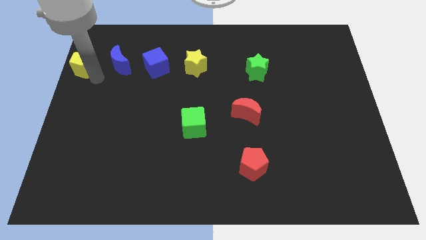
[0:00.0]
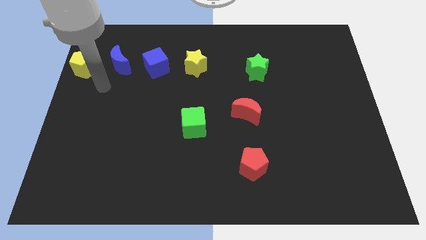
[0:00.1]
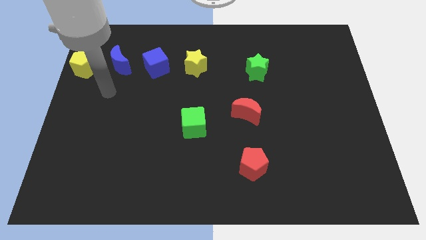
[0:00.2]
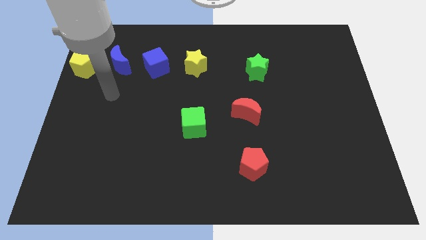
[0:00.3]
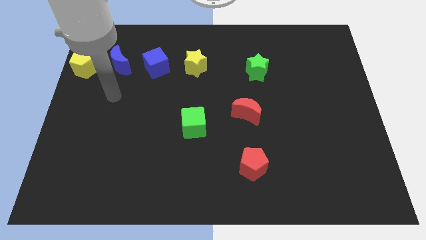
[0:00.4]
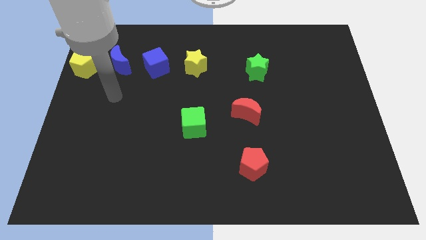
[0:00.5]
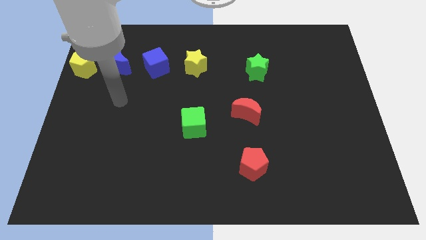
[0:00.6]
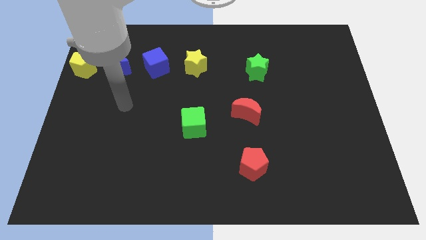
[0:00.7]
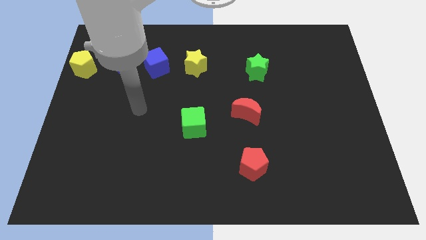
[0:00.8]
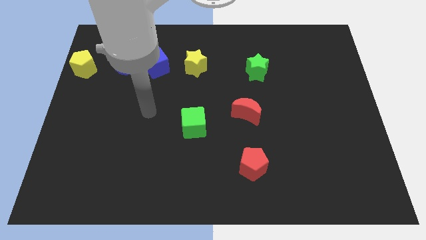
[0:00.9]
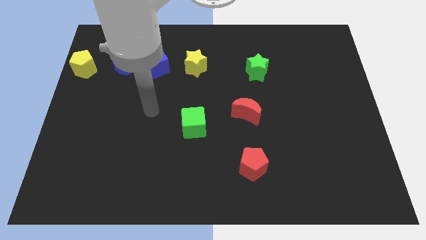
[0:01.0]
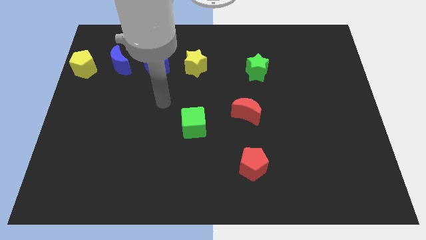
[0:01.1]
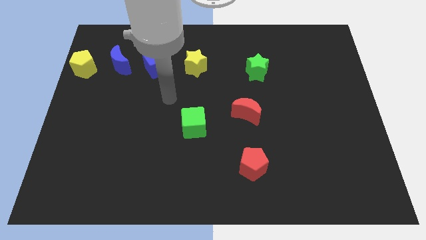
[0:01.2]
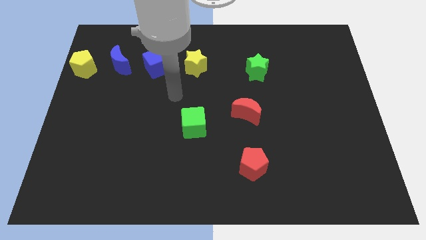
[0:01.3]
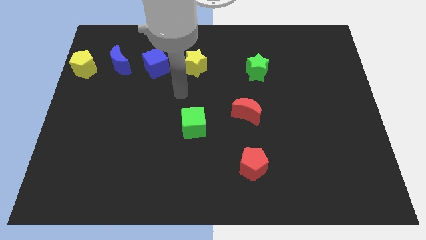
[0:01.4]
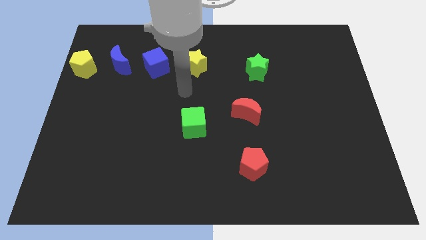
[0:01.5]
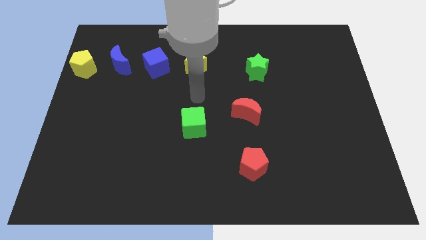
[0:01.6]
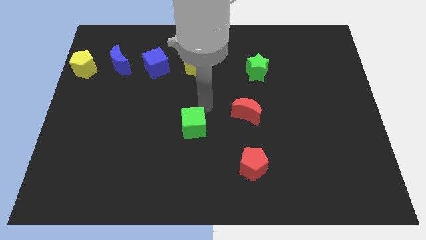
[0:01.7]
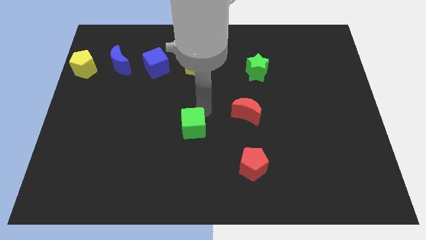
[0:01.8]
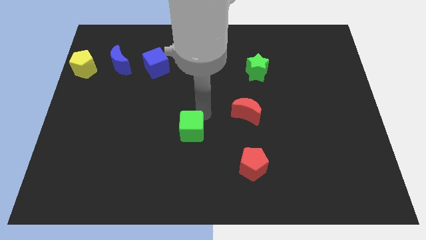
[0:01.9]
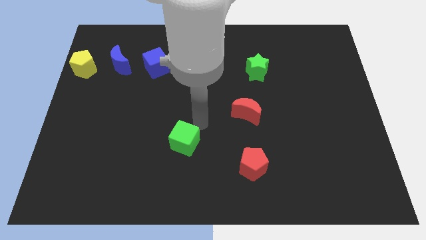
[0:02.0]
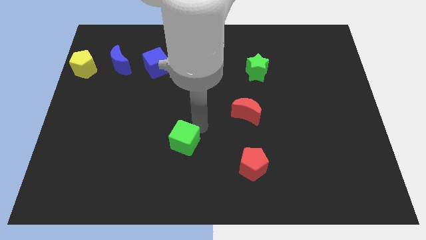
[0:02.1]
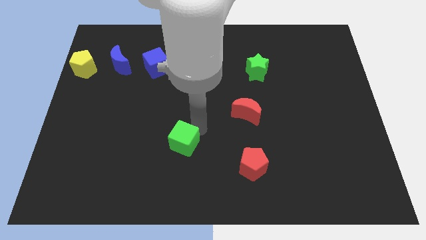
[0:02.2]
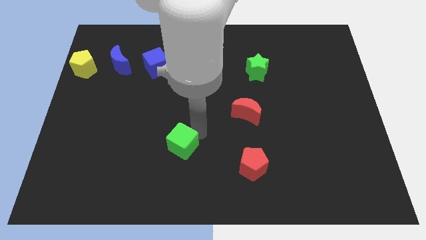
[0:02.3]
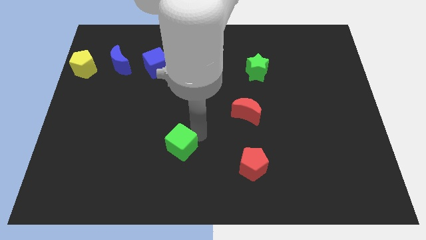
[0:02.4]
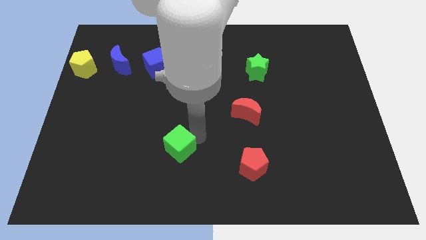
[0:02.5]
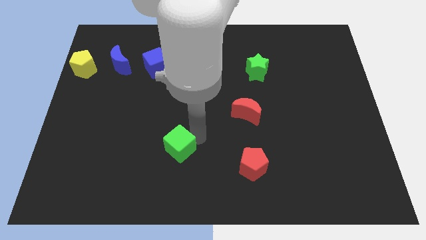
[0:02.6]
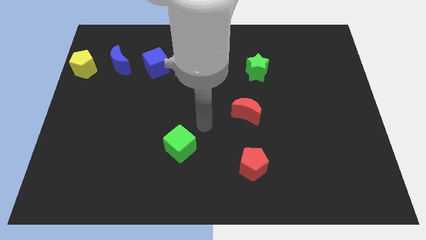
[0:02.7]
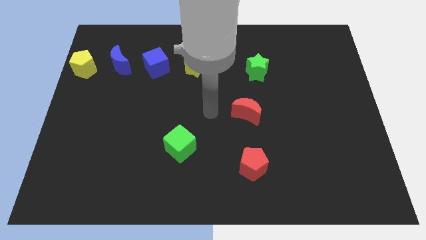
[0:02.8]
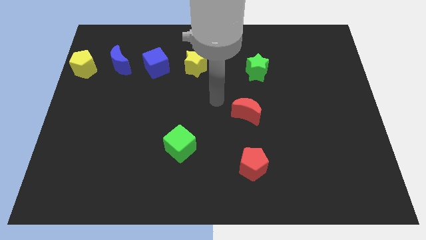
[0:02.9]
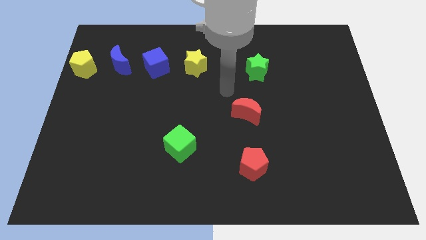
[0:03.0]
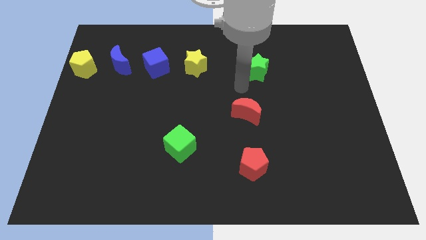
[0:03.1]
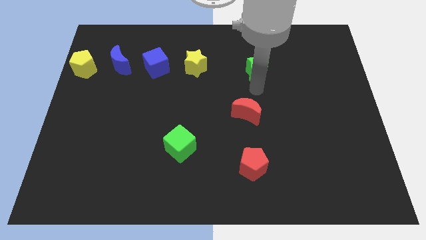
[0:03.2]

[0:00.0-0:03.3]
move the green cube slightly to the bottom

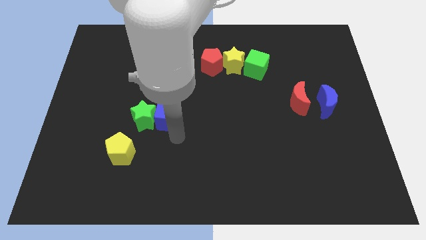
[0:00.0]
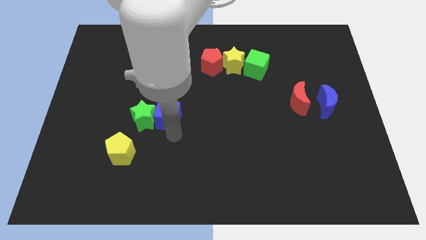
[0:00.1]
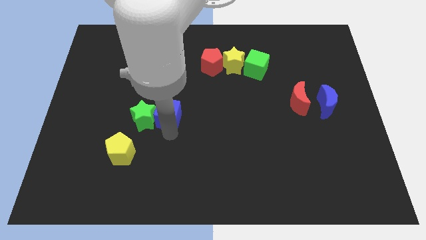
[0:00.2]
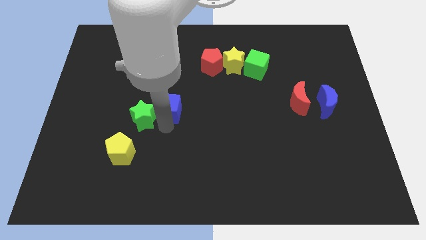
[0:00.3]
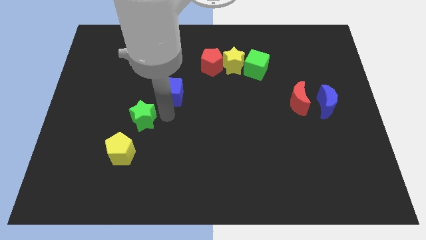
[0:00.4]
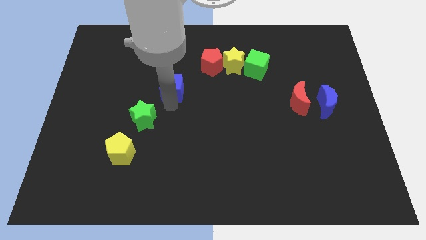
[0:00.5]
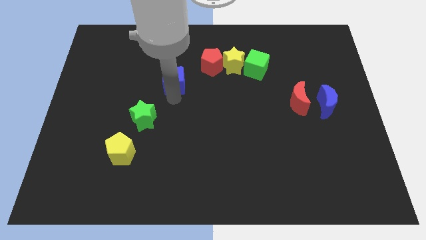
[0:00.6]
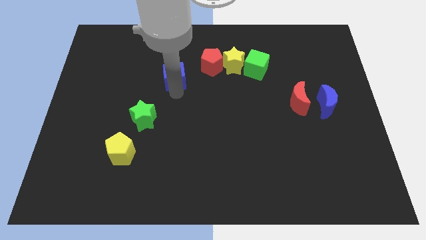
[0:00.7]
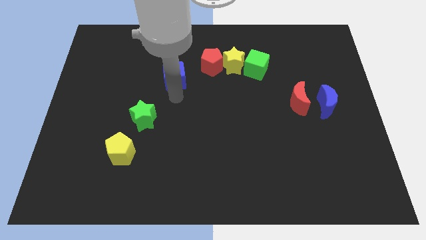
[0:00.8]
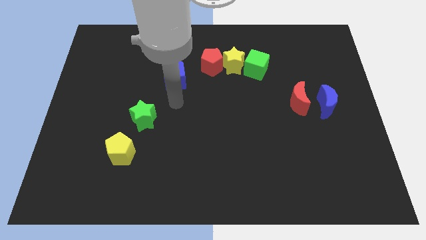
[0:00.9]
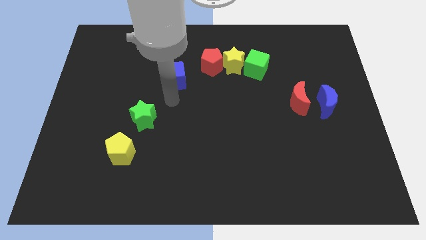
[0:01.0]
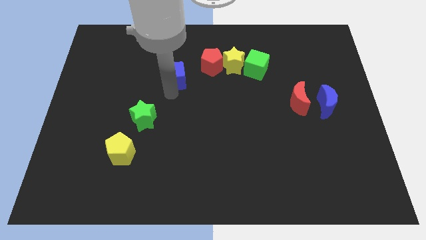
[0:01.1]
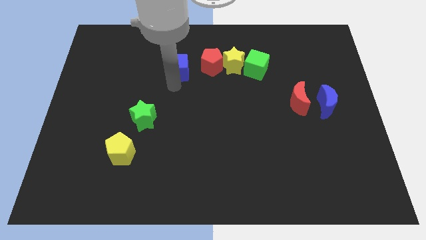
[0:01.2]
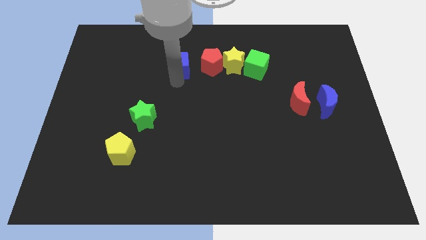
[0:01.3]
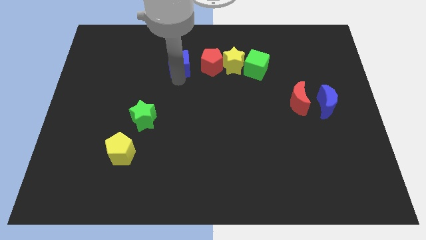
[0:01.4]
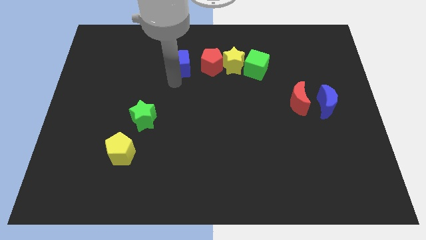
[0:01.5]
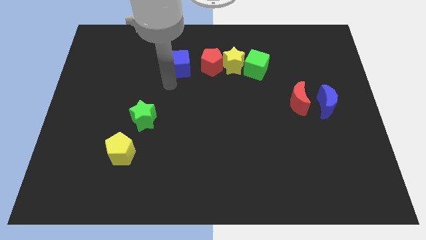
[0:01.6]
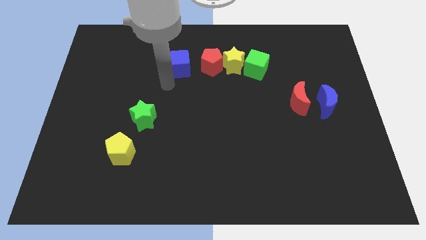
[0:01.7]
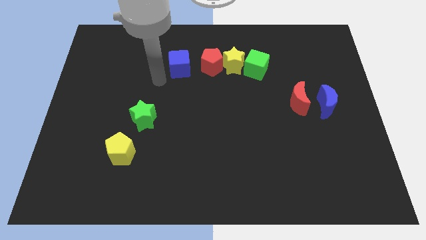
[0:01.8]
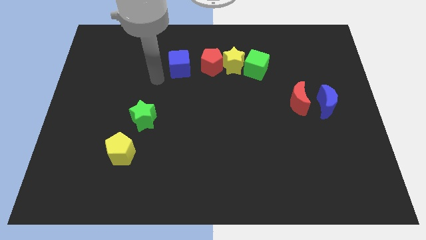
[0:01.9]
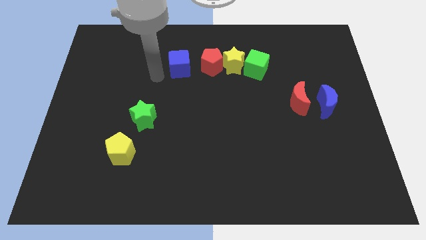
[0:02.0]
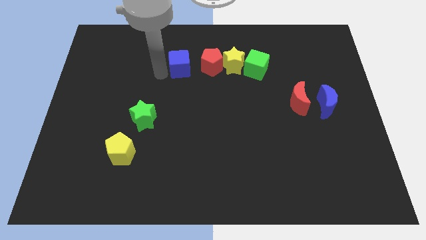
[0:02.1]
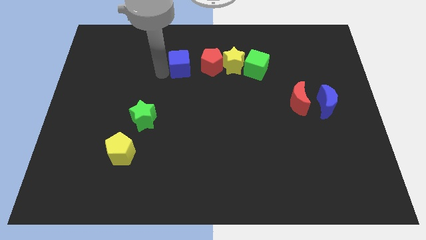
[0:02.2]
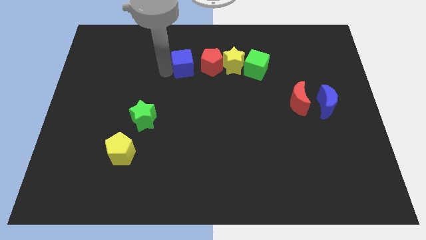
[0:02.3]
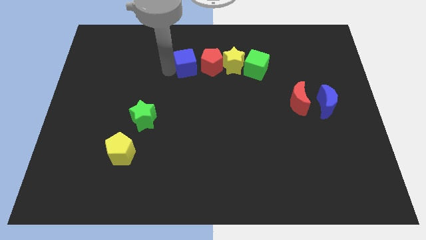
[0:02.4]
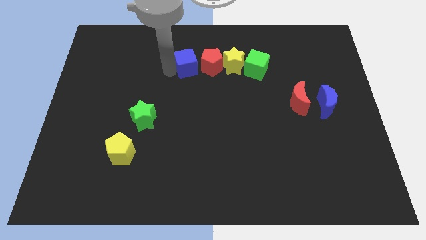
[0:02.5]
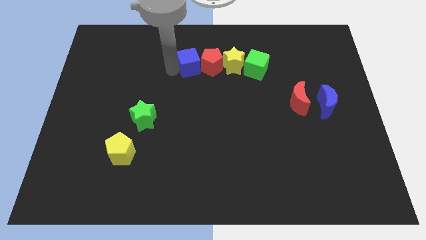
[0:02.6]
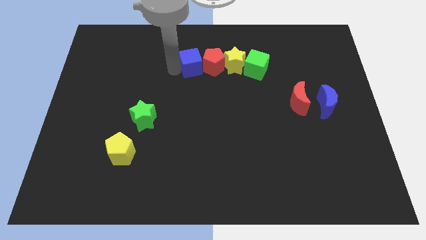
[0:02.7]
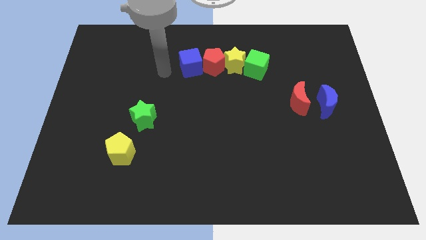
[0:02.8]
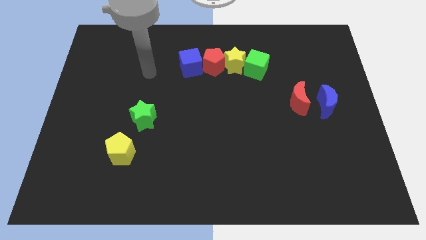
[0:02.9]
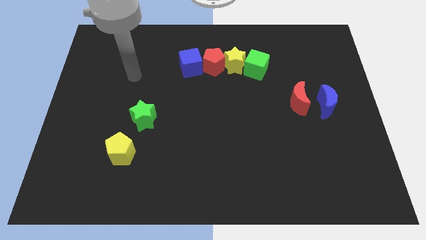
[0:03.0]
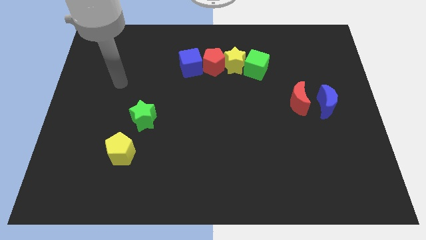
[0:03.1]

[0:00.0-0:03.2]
move blue cube into the red pentagon

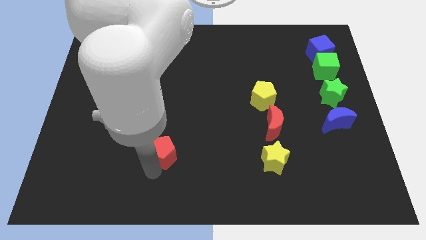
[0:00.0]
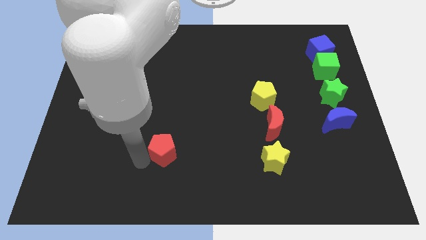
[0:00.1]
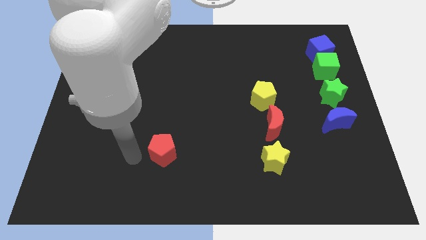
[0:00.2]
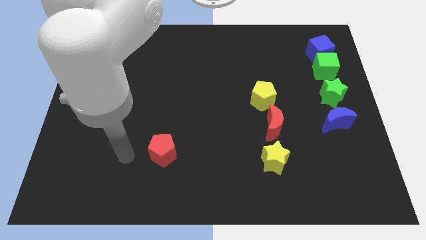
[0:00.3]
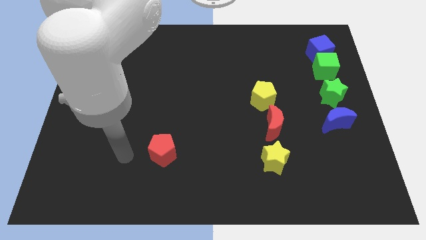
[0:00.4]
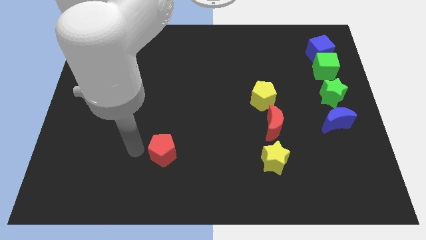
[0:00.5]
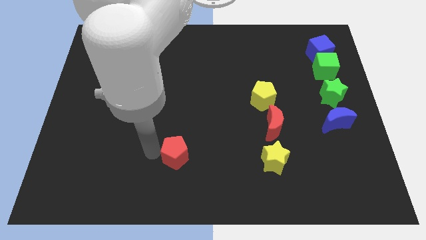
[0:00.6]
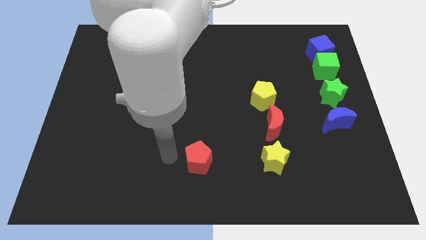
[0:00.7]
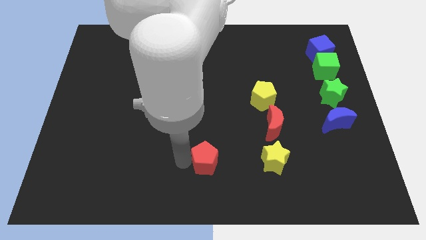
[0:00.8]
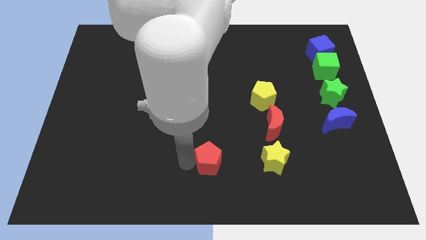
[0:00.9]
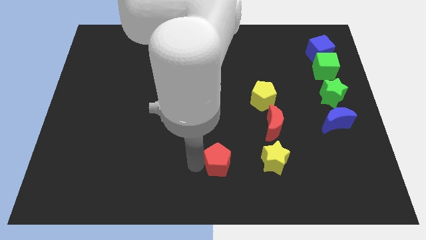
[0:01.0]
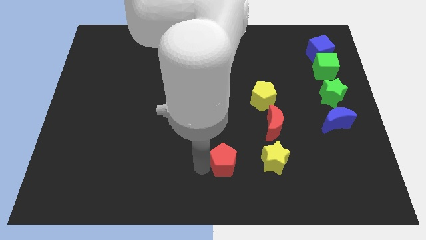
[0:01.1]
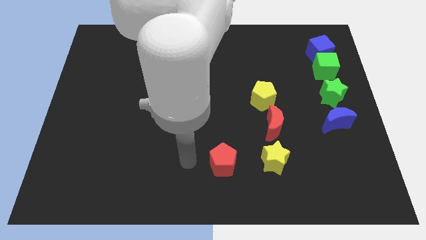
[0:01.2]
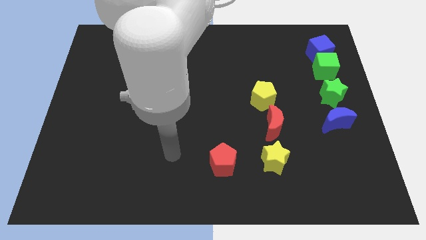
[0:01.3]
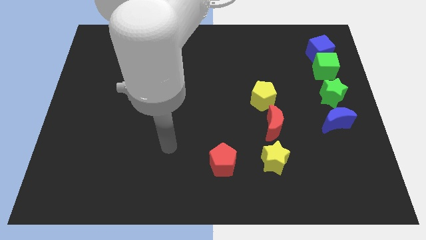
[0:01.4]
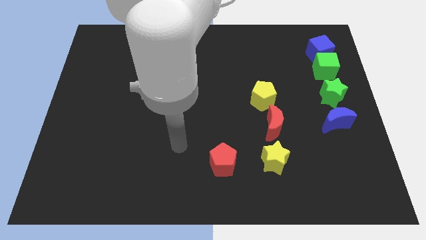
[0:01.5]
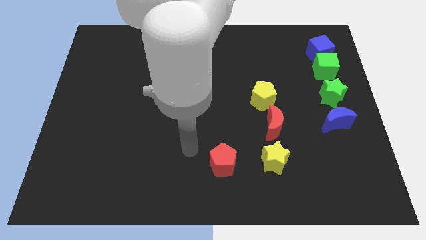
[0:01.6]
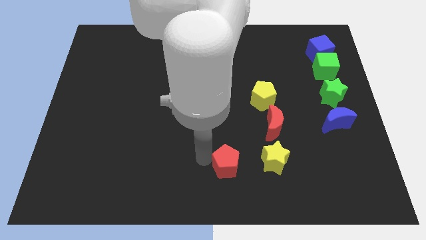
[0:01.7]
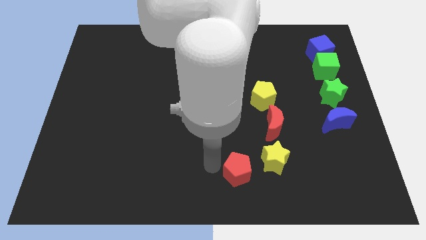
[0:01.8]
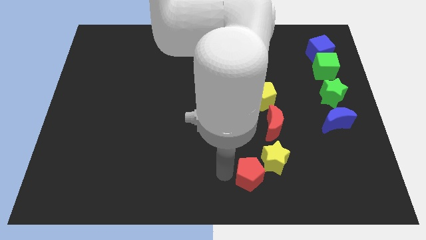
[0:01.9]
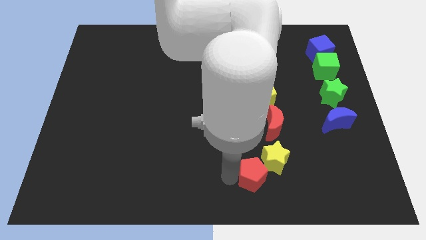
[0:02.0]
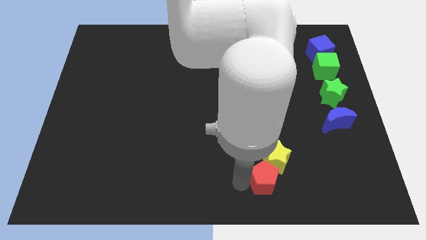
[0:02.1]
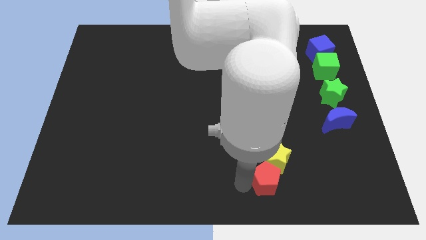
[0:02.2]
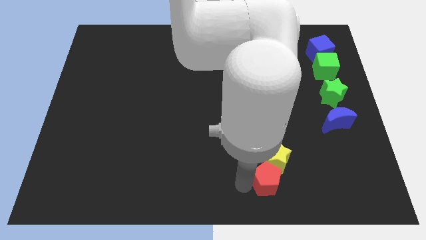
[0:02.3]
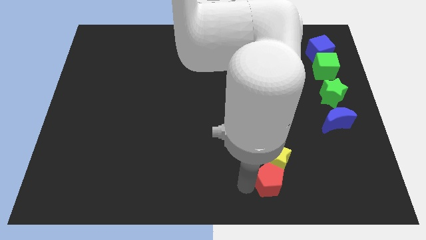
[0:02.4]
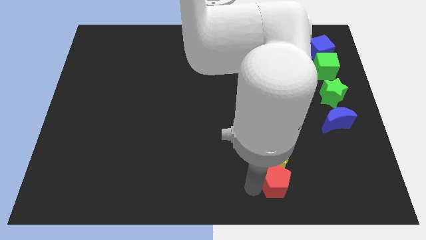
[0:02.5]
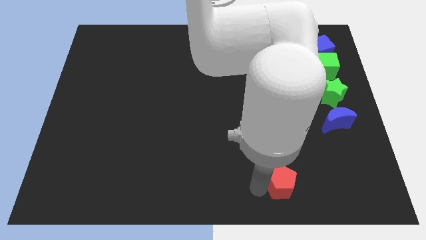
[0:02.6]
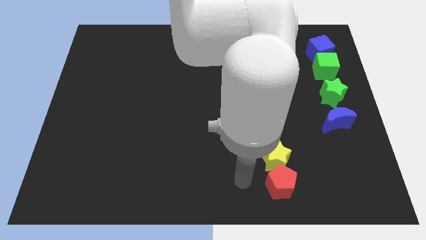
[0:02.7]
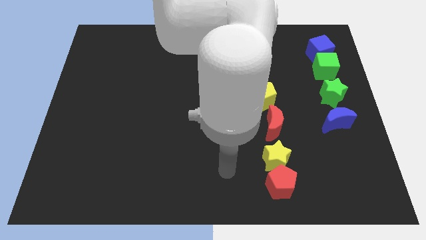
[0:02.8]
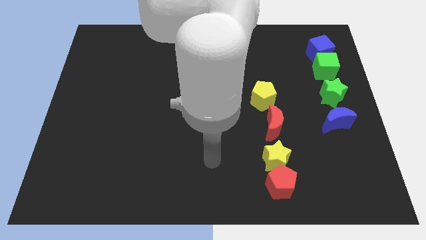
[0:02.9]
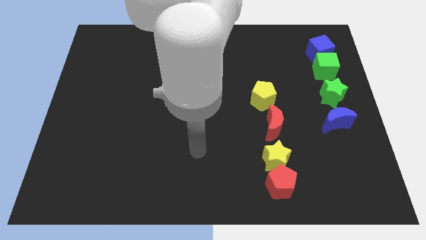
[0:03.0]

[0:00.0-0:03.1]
push the red pentagon below the yellow star
